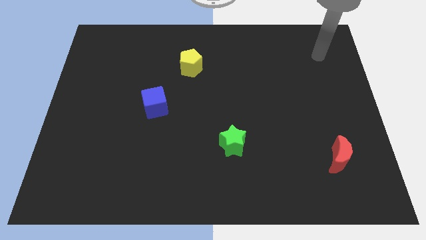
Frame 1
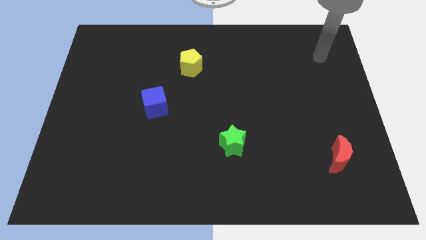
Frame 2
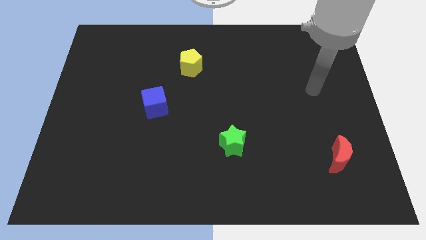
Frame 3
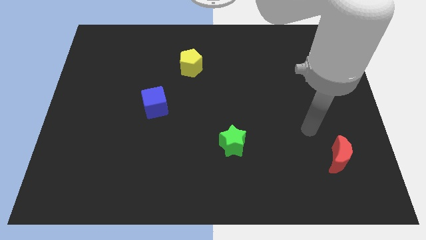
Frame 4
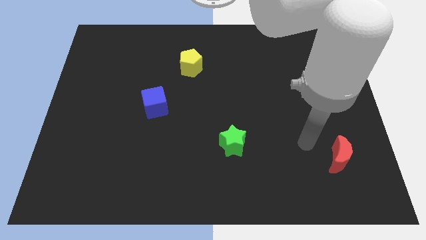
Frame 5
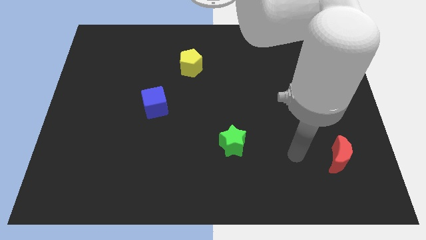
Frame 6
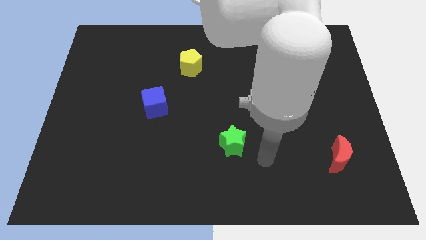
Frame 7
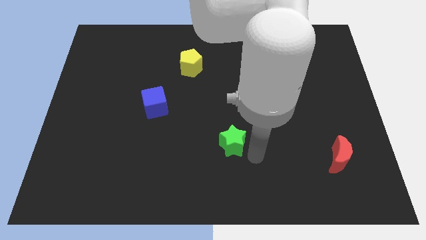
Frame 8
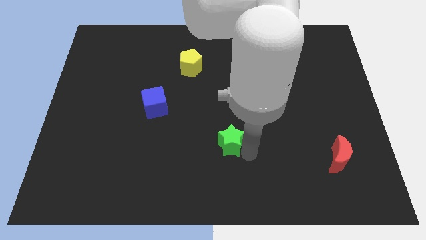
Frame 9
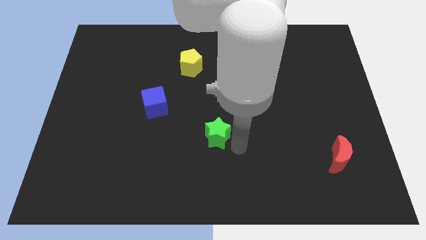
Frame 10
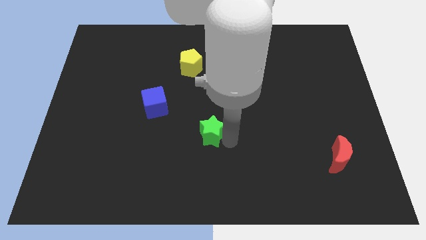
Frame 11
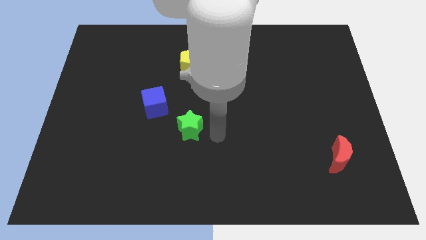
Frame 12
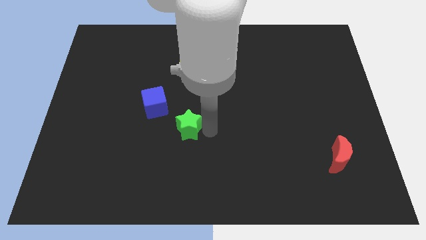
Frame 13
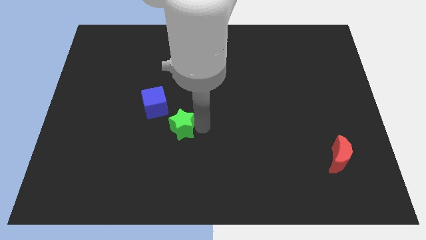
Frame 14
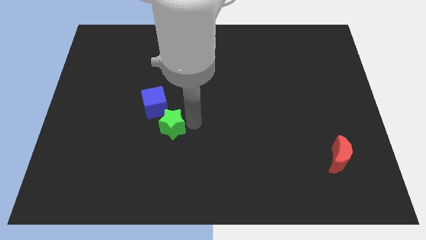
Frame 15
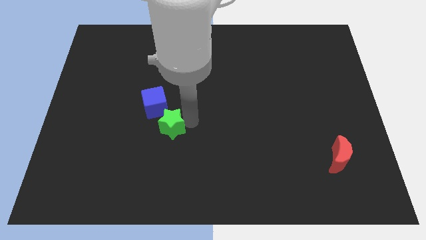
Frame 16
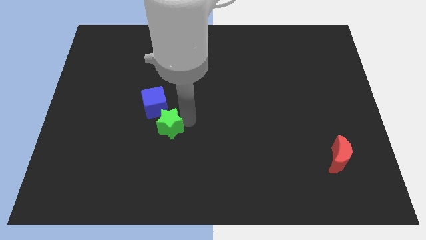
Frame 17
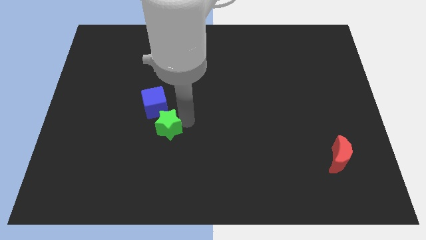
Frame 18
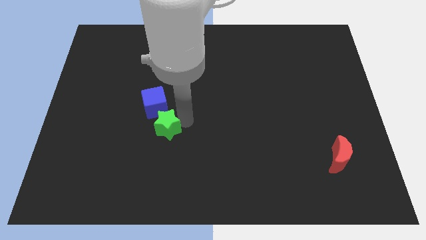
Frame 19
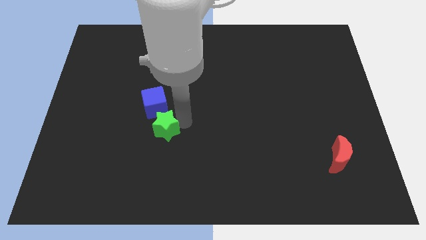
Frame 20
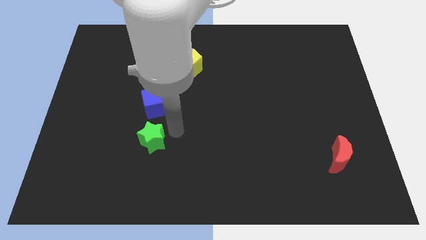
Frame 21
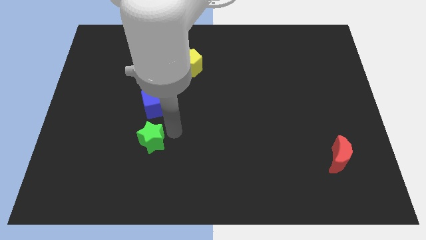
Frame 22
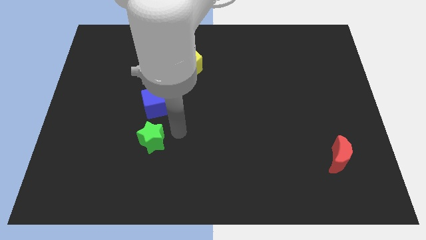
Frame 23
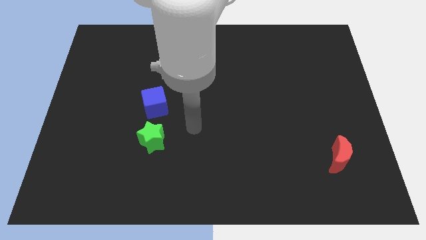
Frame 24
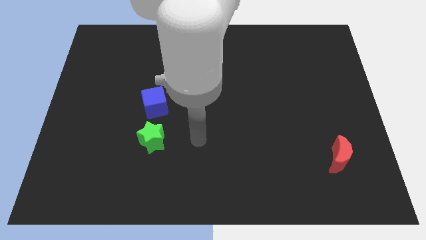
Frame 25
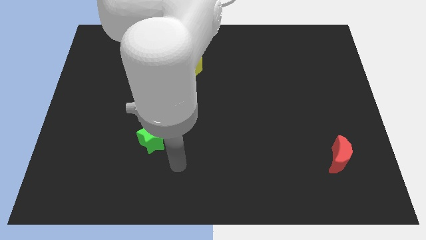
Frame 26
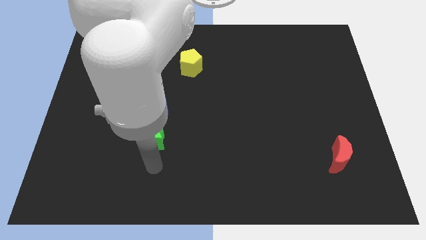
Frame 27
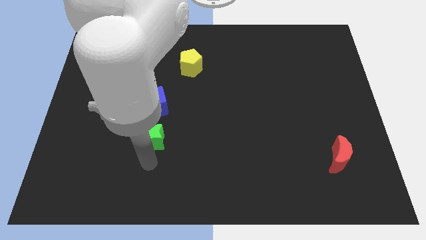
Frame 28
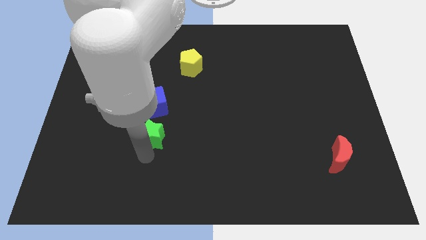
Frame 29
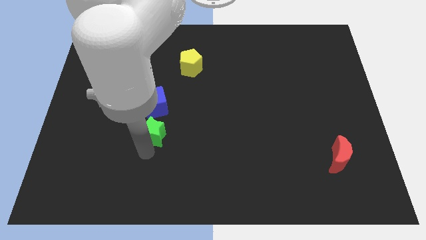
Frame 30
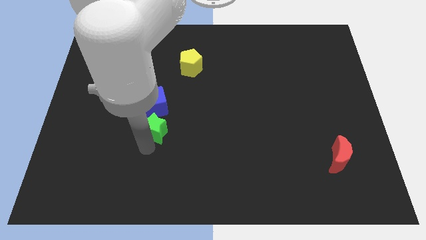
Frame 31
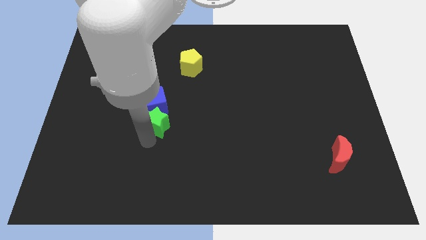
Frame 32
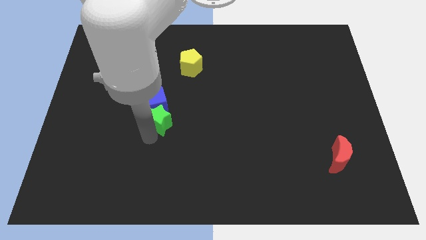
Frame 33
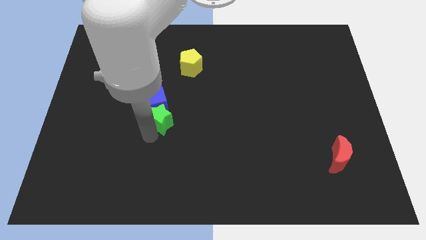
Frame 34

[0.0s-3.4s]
move the green star close to the blue cube

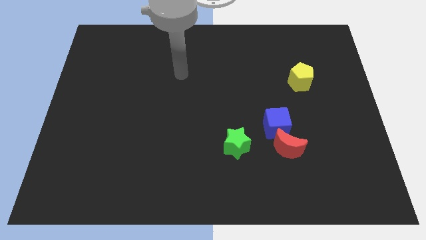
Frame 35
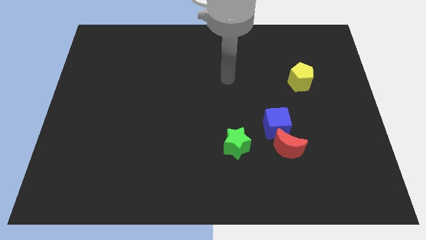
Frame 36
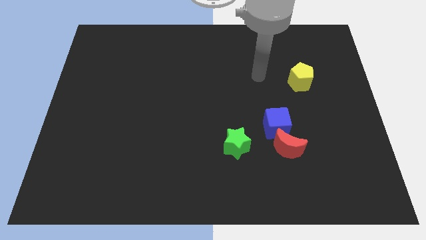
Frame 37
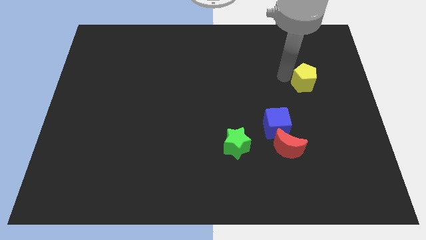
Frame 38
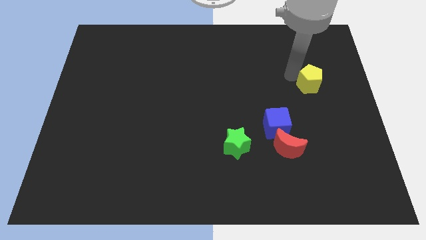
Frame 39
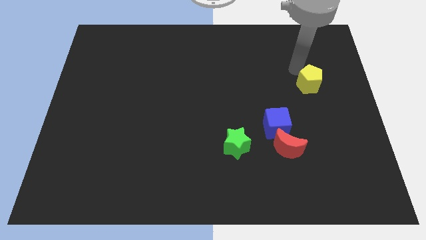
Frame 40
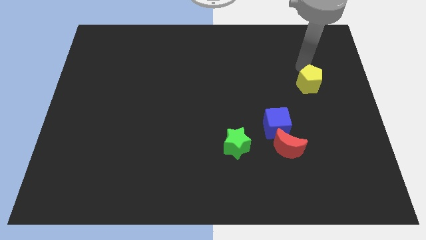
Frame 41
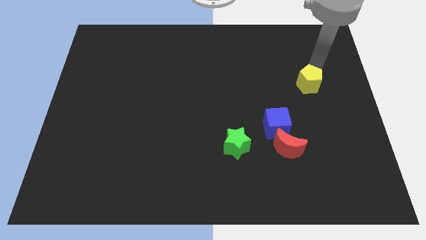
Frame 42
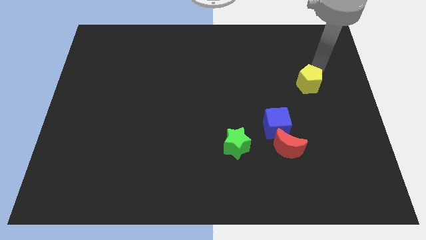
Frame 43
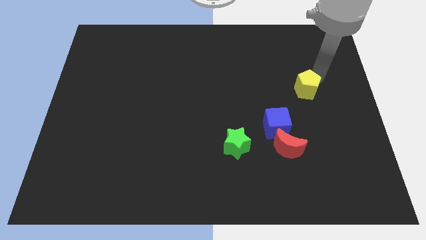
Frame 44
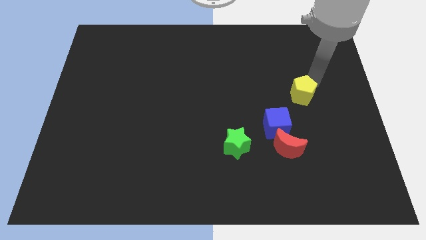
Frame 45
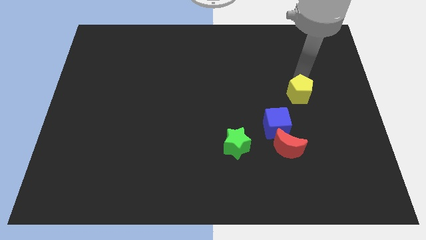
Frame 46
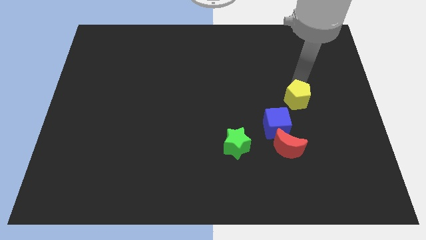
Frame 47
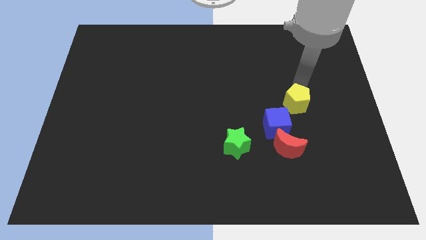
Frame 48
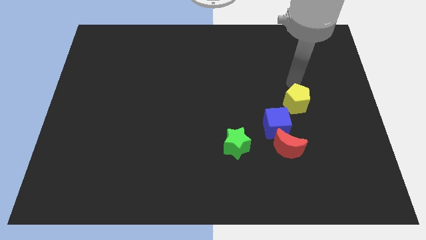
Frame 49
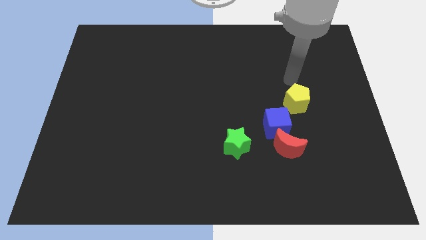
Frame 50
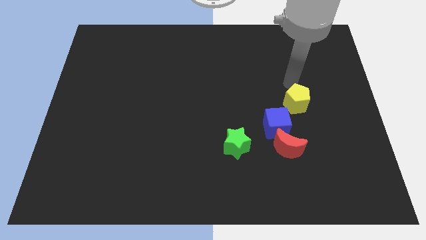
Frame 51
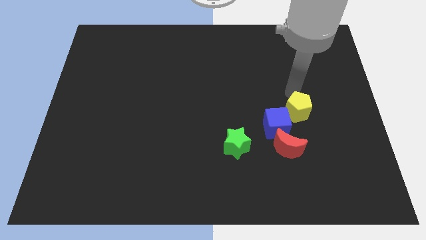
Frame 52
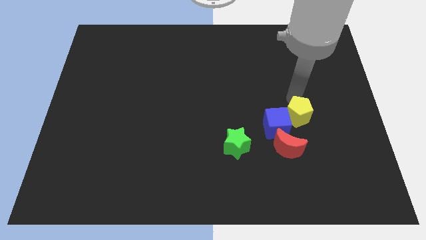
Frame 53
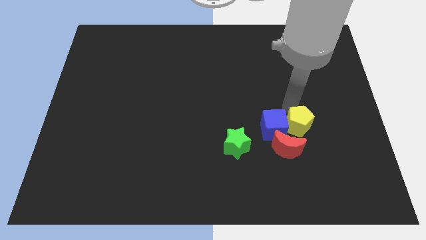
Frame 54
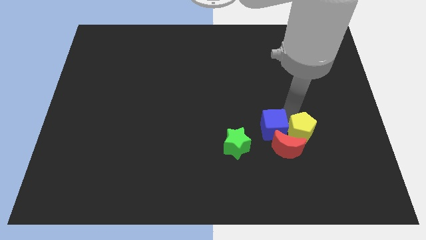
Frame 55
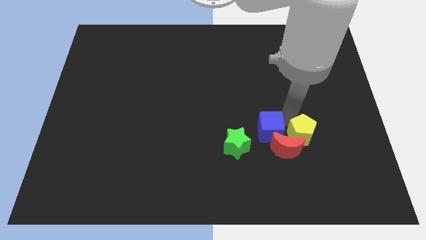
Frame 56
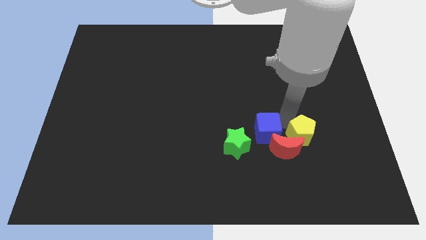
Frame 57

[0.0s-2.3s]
slide the pentagon towards the red block

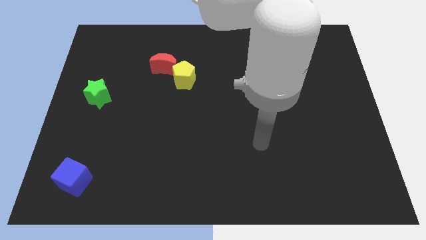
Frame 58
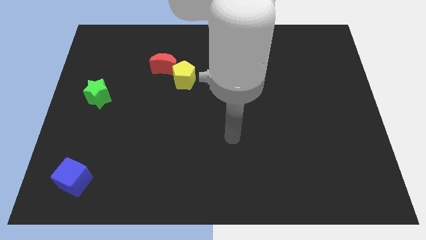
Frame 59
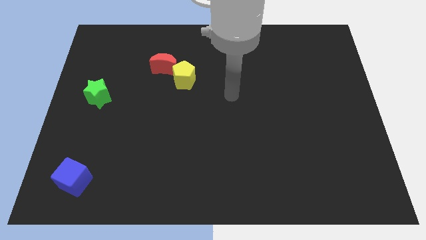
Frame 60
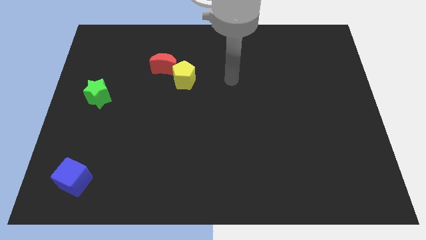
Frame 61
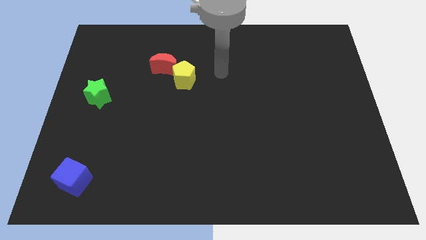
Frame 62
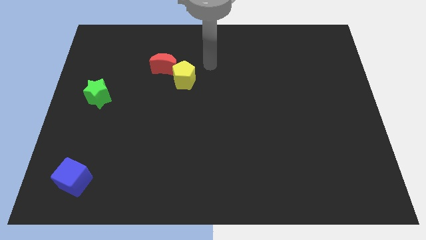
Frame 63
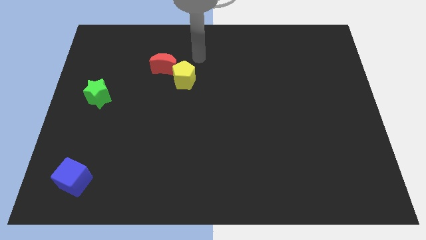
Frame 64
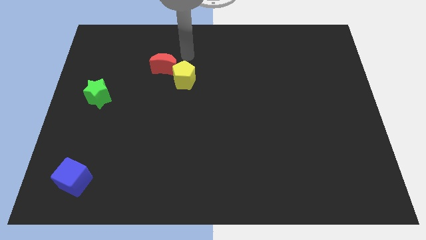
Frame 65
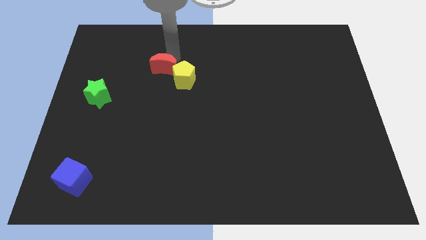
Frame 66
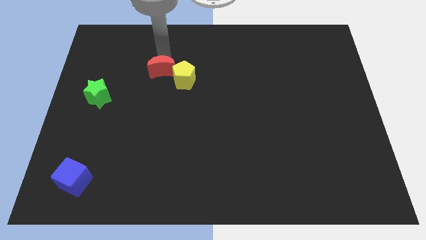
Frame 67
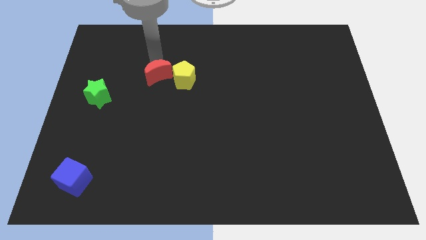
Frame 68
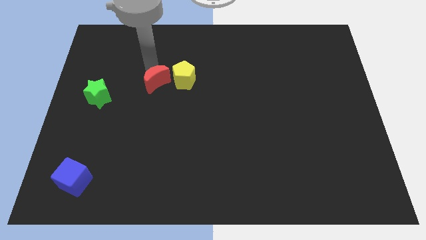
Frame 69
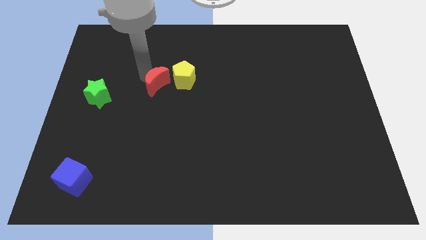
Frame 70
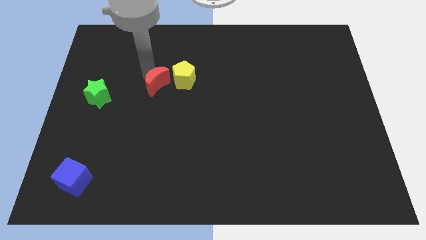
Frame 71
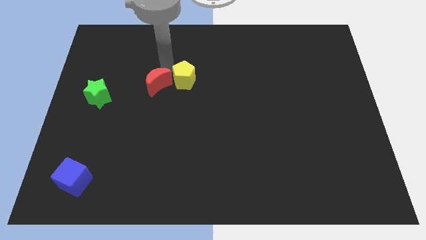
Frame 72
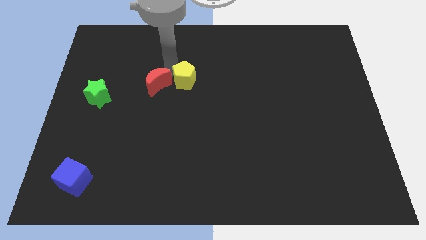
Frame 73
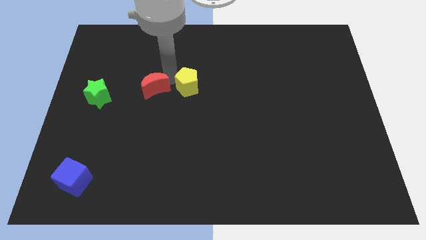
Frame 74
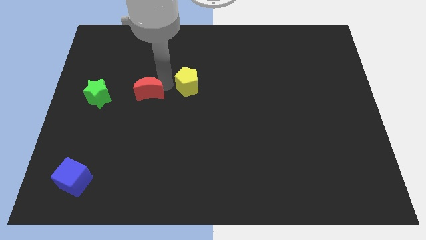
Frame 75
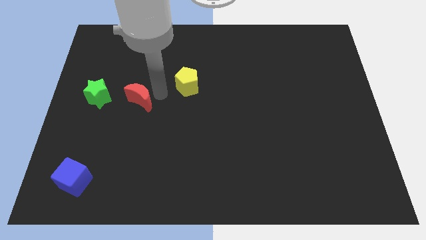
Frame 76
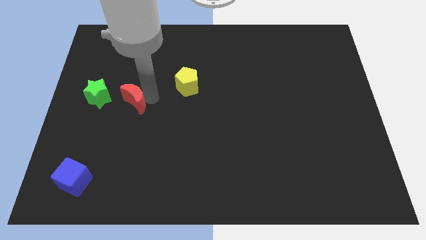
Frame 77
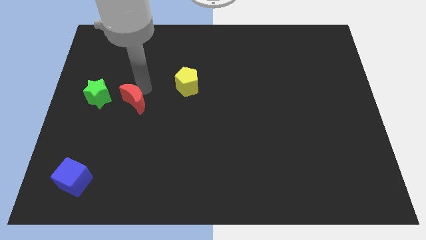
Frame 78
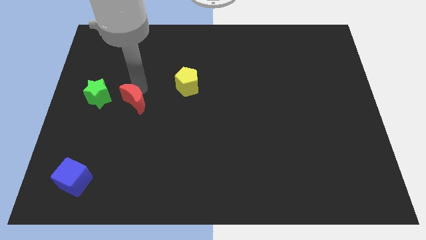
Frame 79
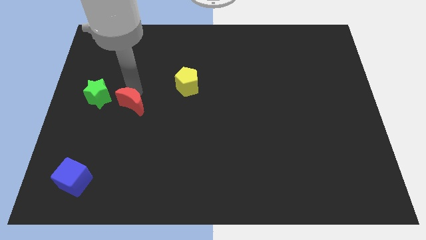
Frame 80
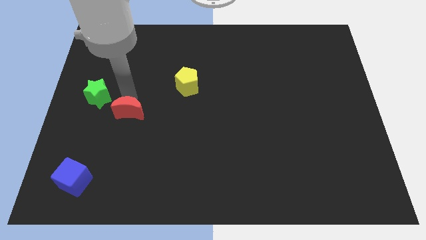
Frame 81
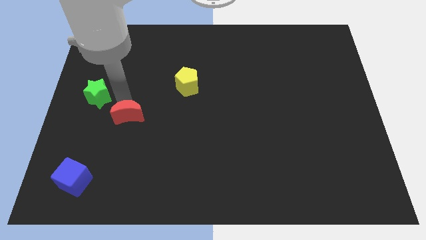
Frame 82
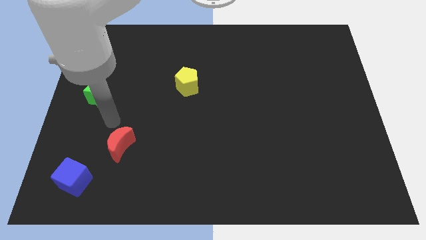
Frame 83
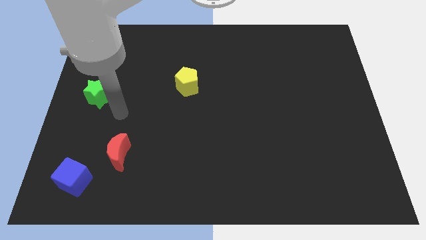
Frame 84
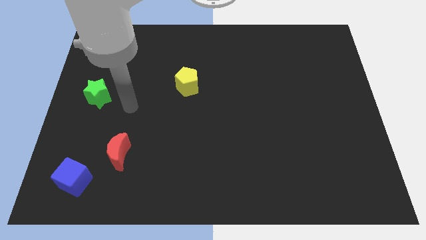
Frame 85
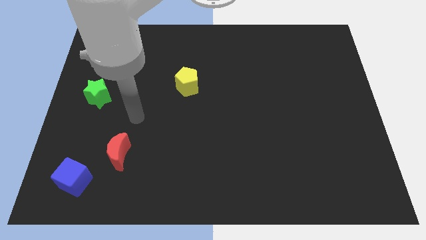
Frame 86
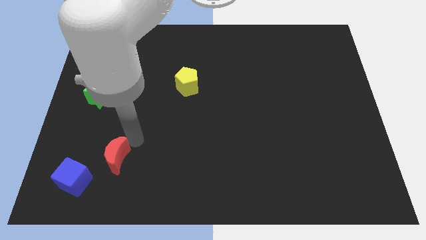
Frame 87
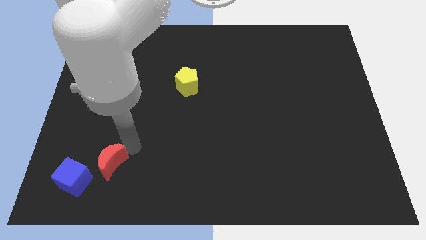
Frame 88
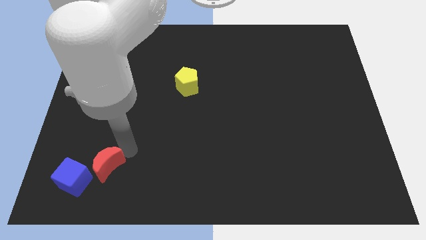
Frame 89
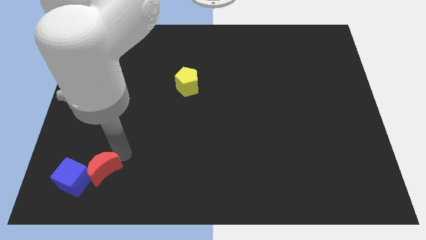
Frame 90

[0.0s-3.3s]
slide the red moon towards the blue cube
